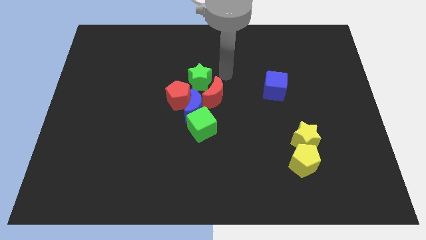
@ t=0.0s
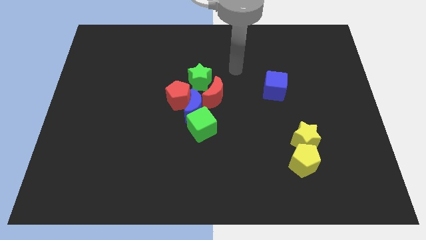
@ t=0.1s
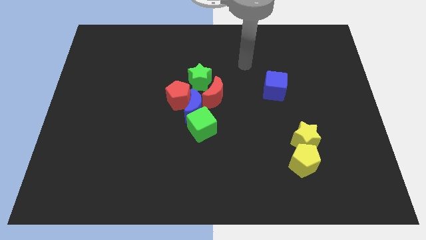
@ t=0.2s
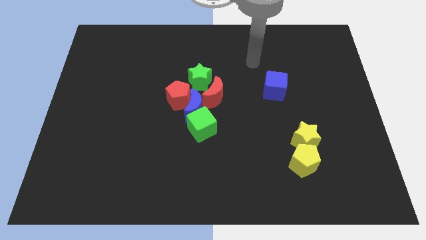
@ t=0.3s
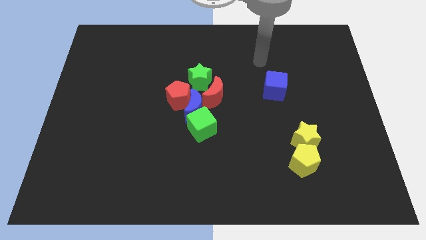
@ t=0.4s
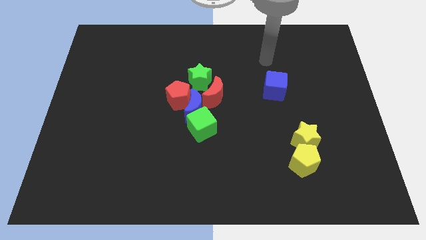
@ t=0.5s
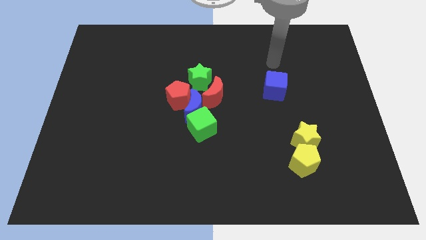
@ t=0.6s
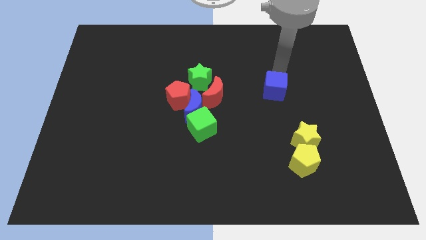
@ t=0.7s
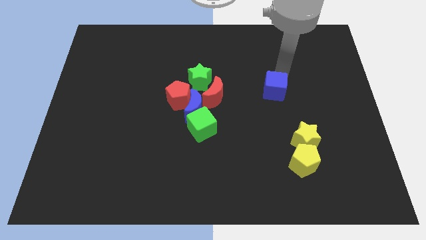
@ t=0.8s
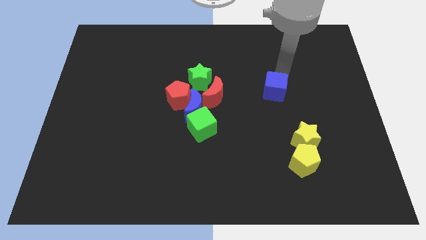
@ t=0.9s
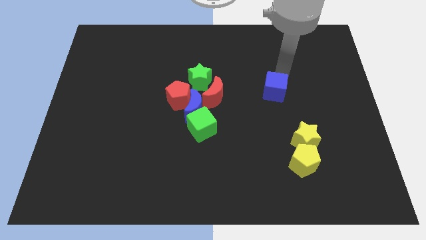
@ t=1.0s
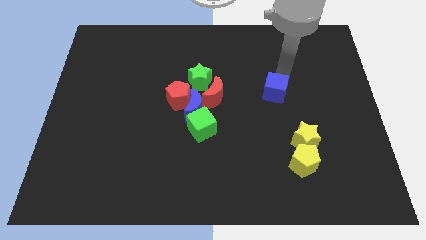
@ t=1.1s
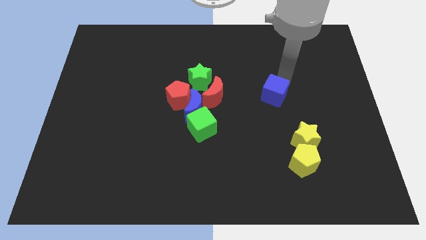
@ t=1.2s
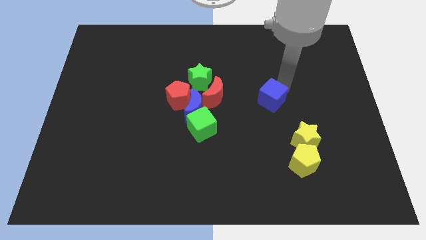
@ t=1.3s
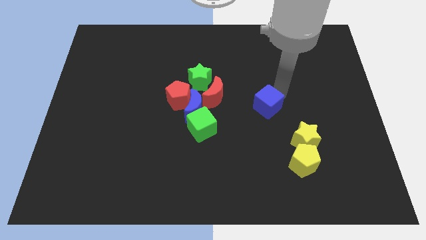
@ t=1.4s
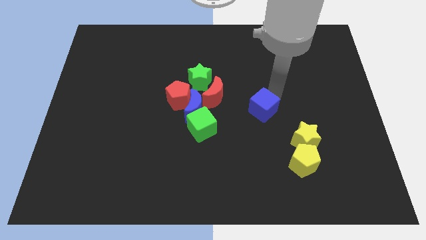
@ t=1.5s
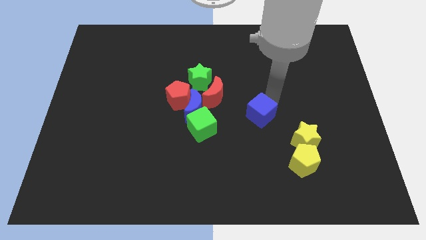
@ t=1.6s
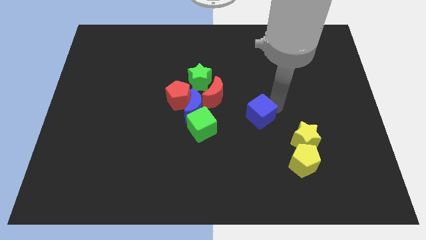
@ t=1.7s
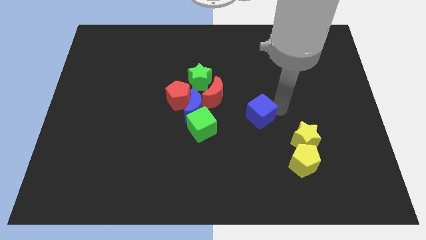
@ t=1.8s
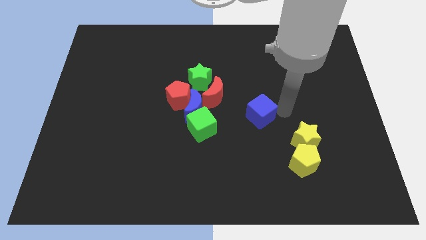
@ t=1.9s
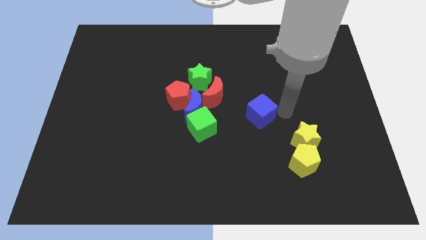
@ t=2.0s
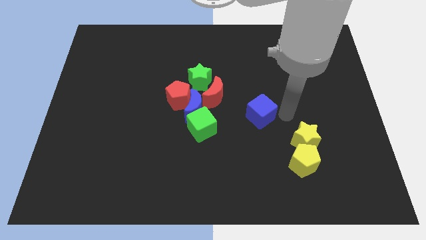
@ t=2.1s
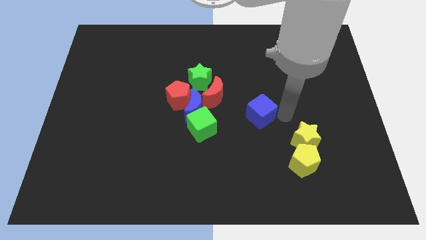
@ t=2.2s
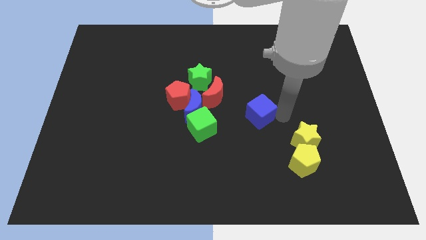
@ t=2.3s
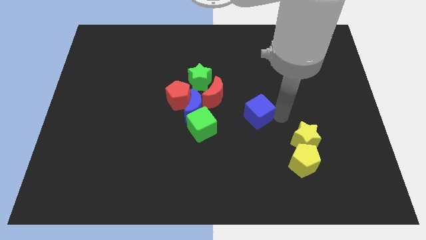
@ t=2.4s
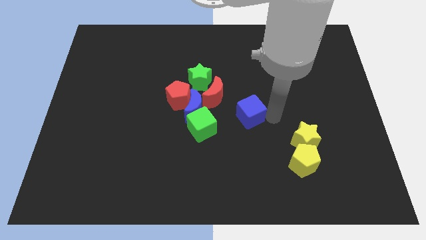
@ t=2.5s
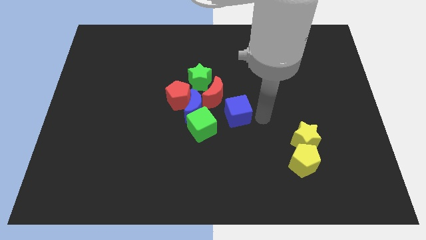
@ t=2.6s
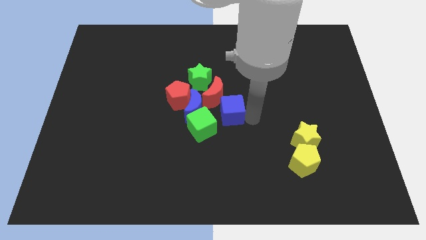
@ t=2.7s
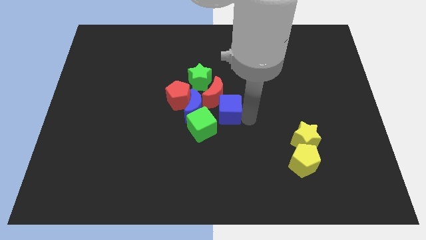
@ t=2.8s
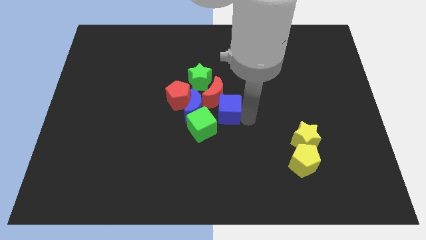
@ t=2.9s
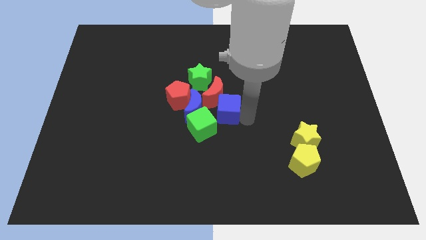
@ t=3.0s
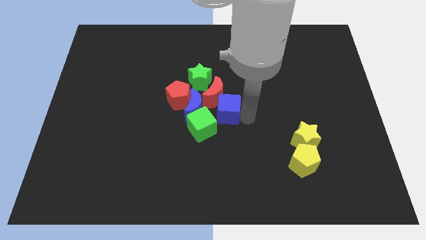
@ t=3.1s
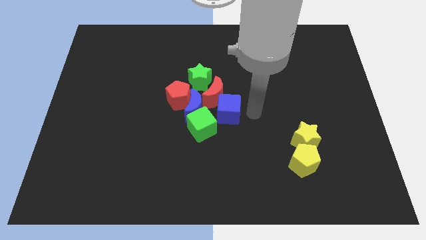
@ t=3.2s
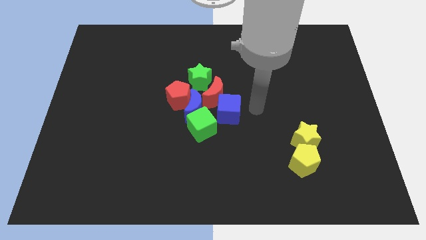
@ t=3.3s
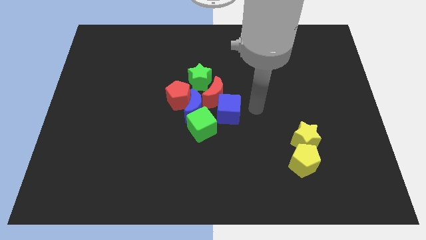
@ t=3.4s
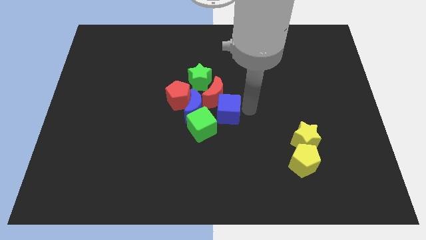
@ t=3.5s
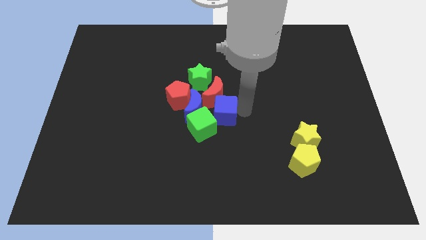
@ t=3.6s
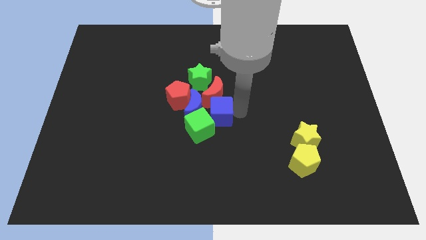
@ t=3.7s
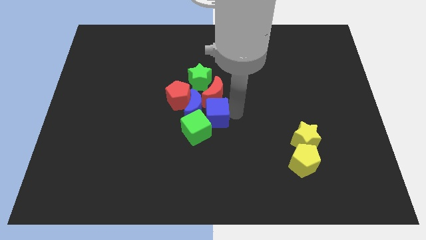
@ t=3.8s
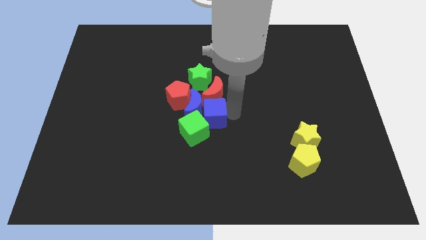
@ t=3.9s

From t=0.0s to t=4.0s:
push the blue cube to the group of blocks

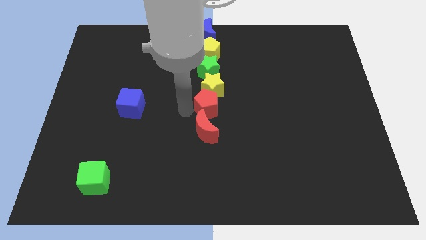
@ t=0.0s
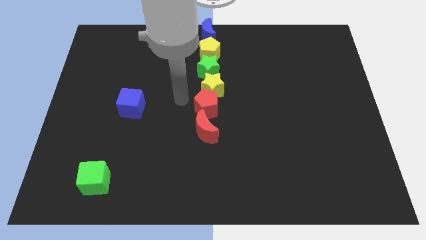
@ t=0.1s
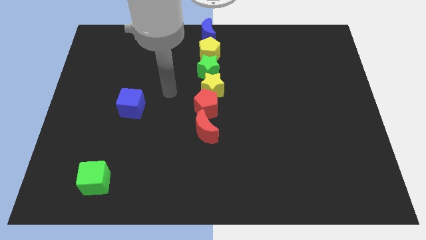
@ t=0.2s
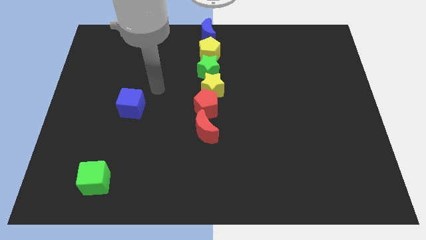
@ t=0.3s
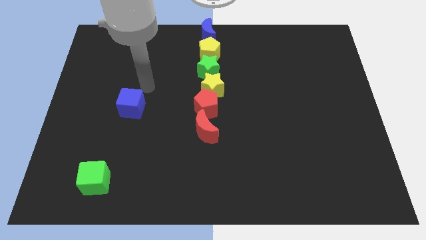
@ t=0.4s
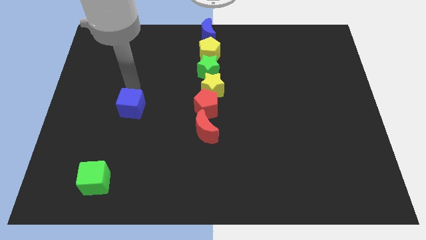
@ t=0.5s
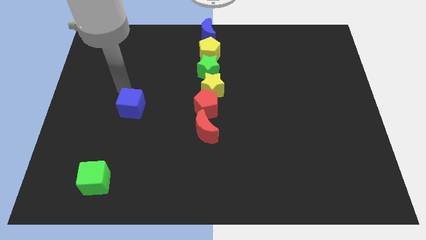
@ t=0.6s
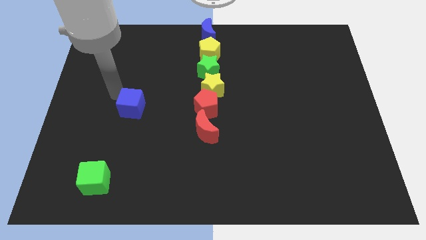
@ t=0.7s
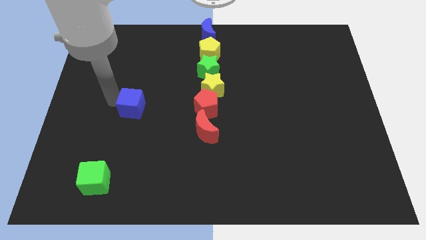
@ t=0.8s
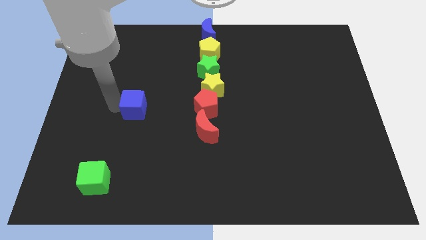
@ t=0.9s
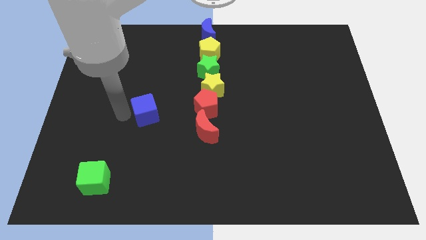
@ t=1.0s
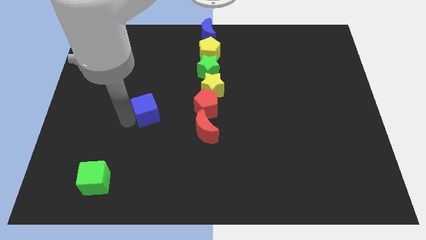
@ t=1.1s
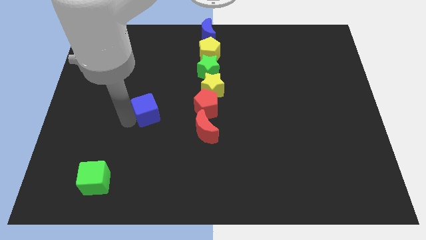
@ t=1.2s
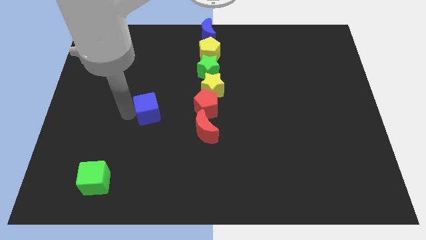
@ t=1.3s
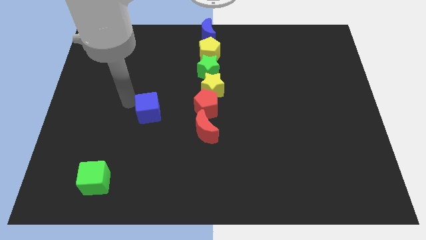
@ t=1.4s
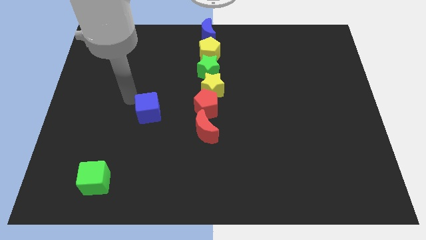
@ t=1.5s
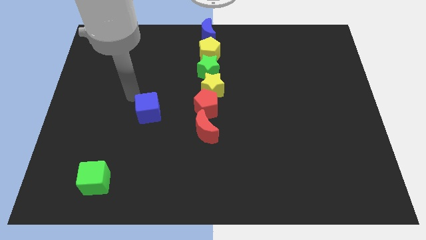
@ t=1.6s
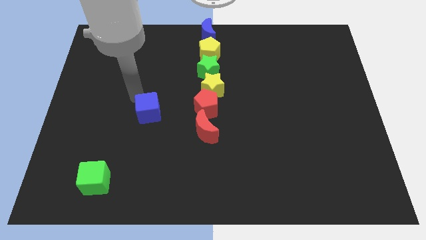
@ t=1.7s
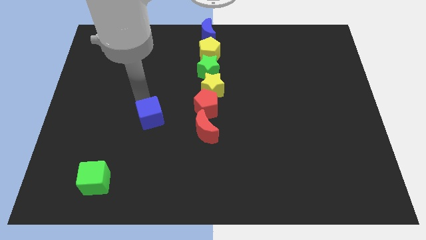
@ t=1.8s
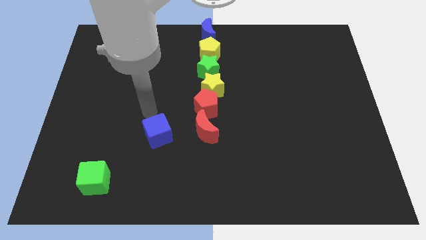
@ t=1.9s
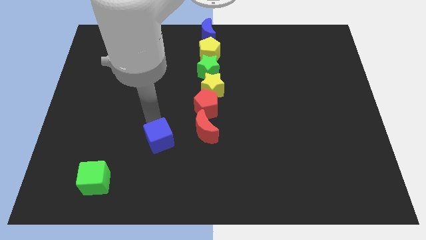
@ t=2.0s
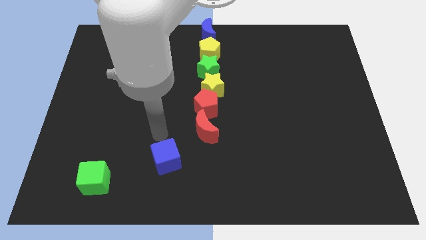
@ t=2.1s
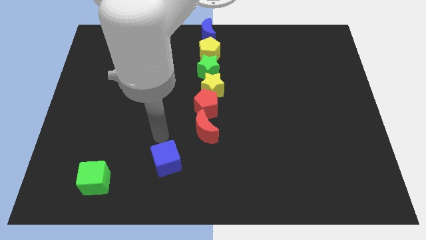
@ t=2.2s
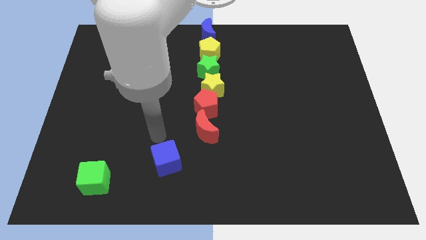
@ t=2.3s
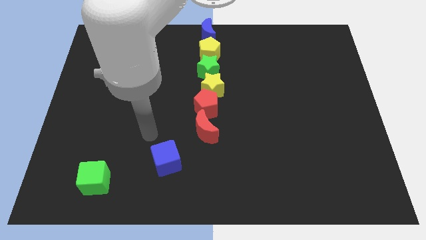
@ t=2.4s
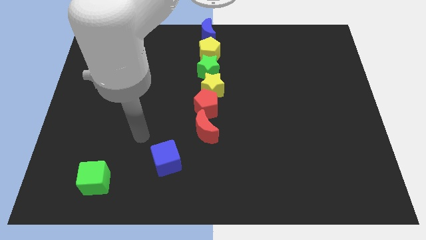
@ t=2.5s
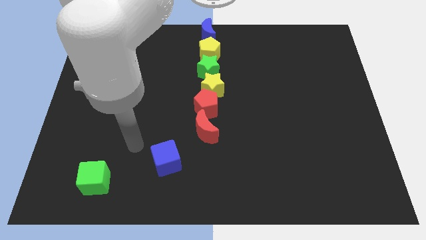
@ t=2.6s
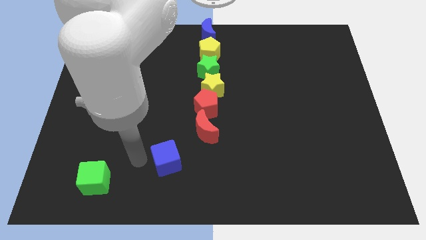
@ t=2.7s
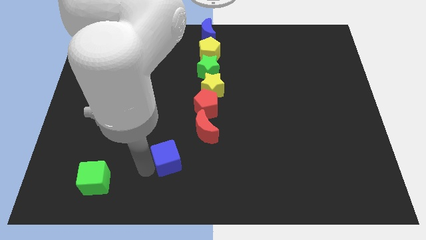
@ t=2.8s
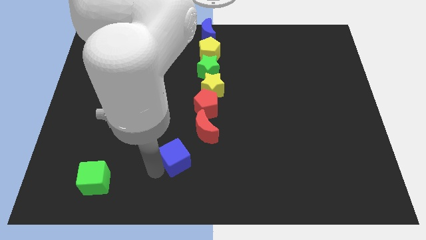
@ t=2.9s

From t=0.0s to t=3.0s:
move the blue cube towards the left side of the red moon

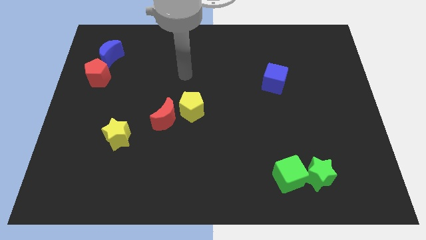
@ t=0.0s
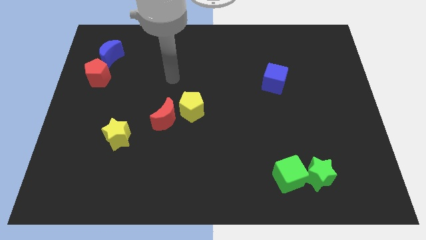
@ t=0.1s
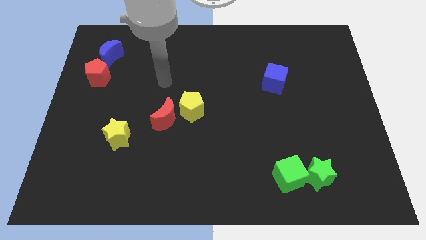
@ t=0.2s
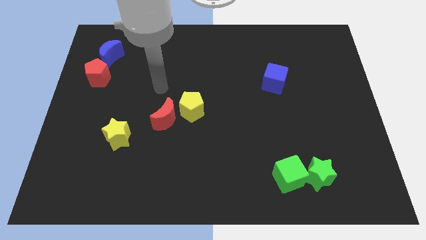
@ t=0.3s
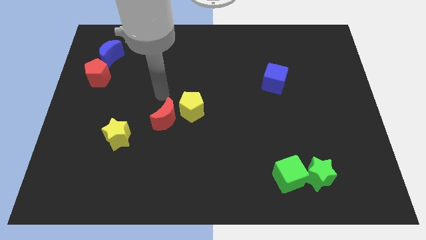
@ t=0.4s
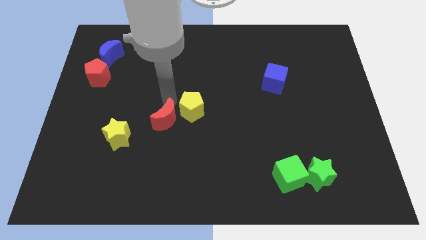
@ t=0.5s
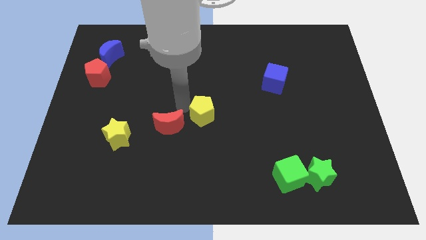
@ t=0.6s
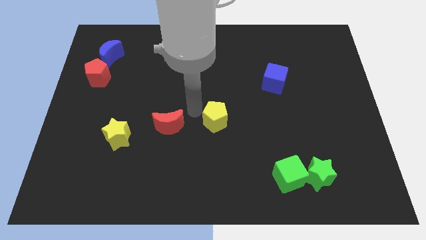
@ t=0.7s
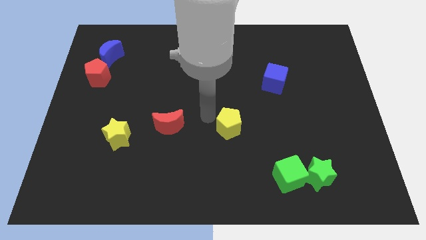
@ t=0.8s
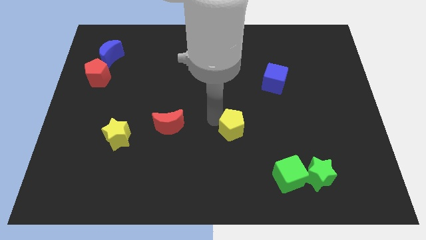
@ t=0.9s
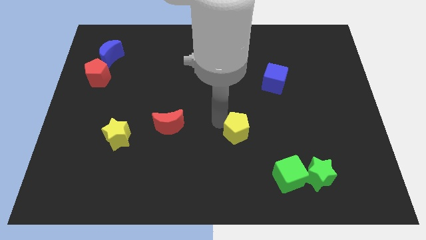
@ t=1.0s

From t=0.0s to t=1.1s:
separate yellow pentagon from red moon

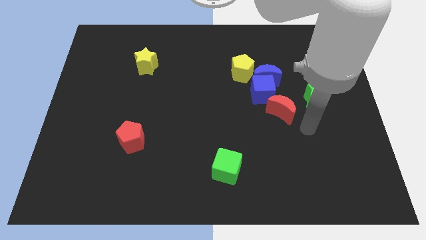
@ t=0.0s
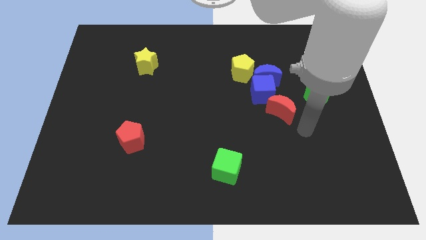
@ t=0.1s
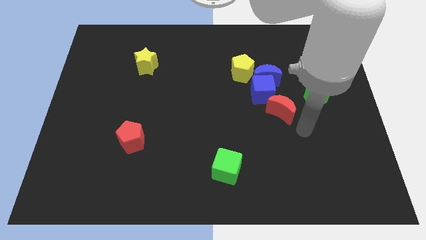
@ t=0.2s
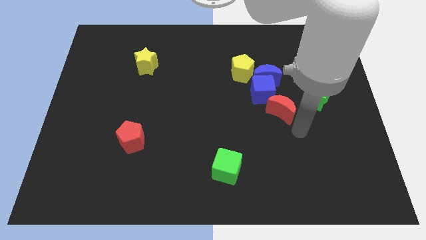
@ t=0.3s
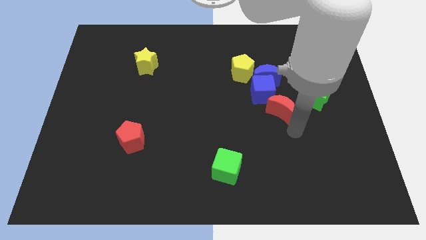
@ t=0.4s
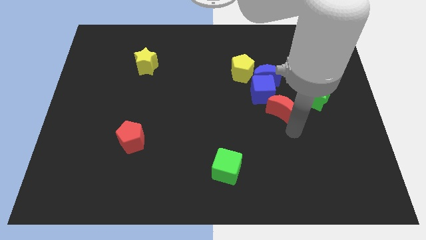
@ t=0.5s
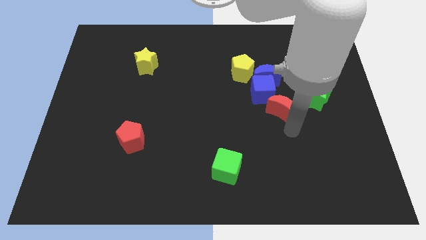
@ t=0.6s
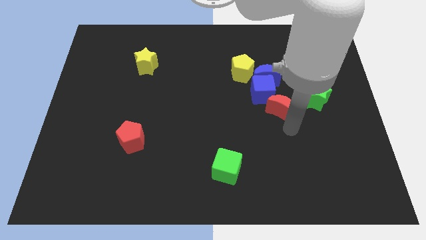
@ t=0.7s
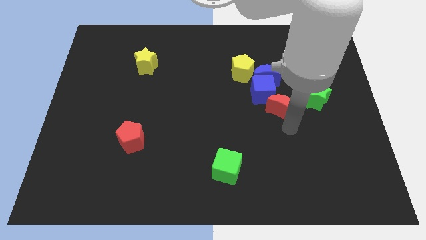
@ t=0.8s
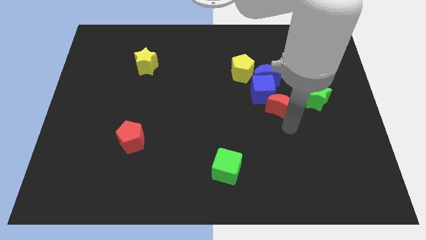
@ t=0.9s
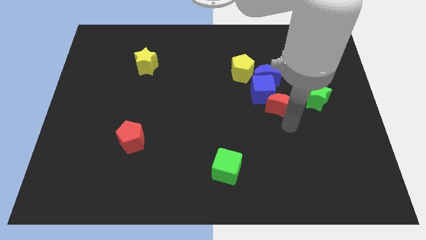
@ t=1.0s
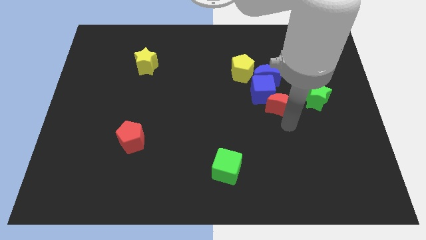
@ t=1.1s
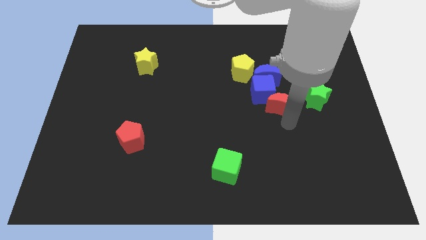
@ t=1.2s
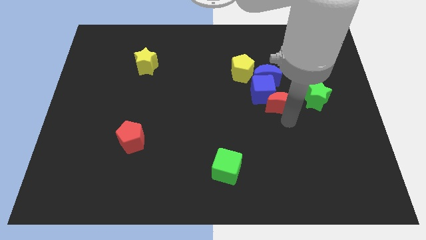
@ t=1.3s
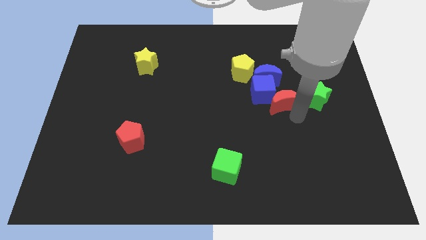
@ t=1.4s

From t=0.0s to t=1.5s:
slightly push the red crescent to the left of the green star
